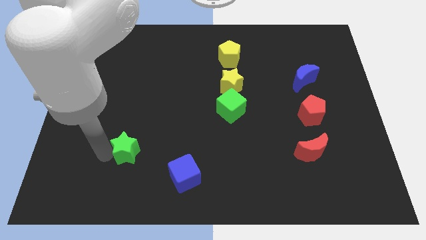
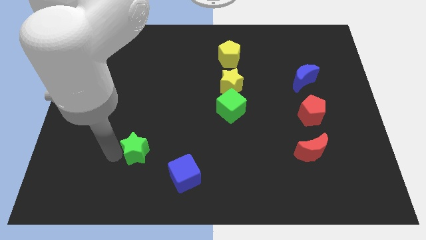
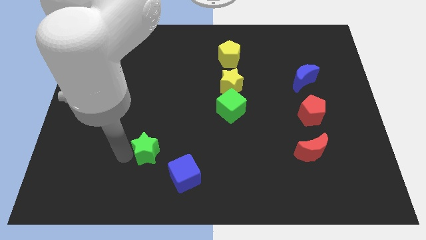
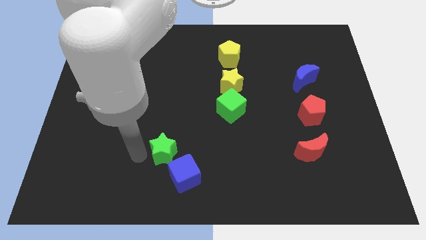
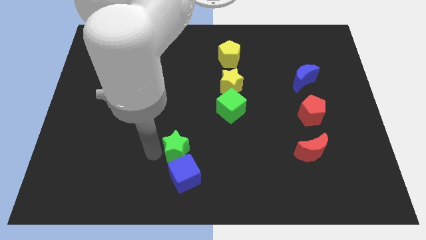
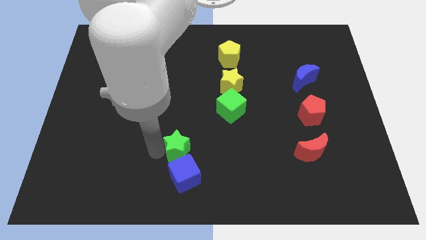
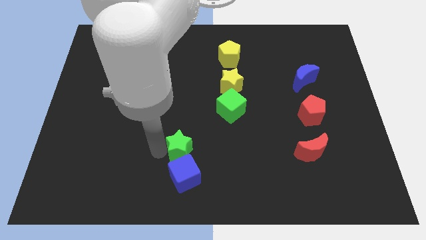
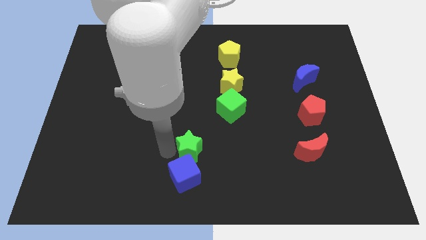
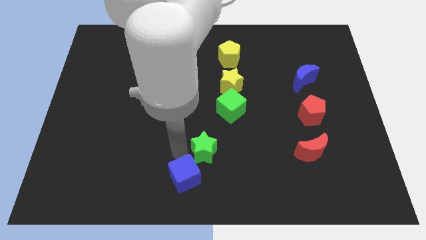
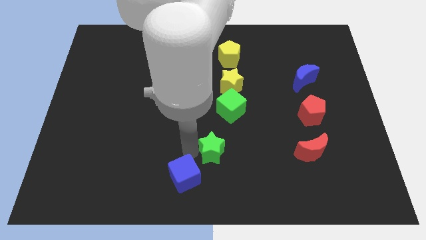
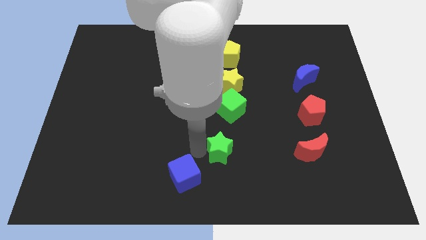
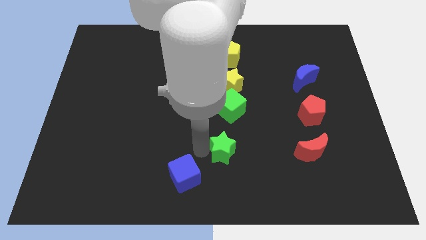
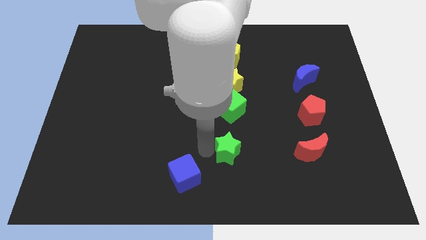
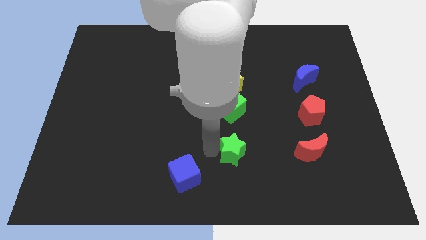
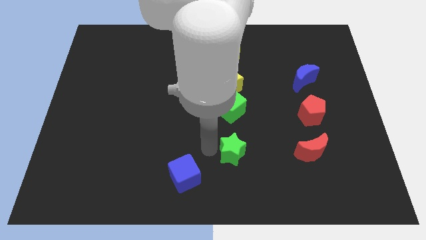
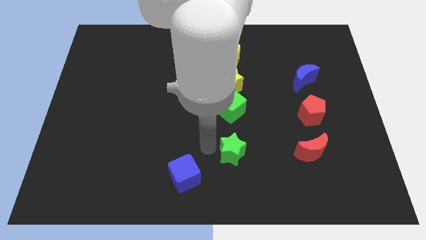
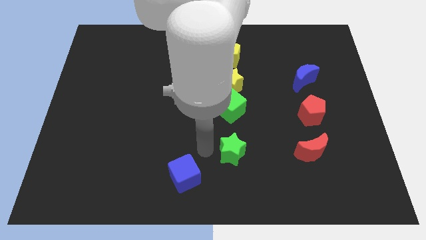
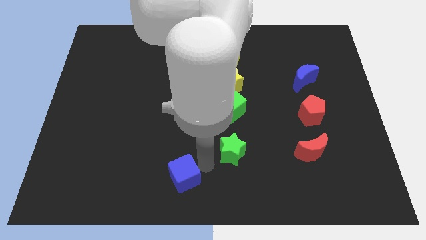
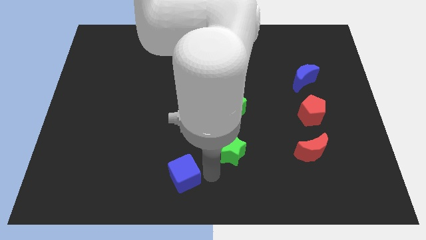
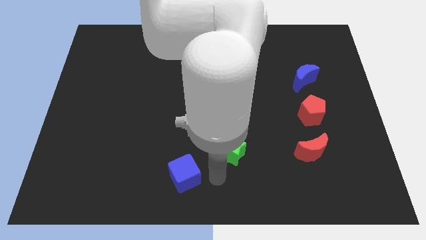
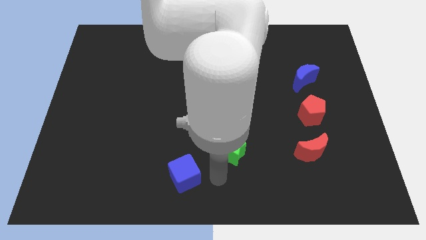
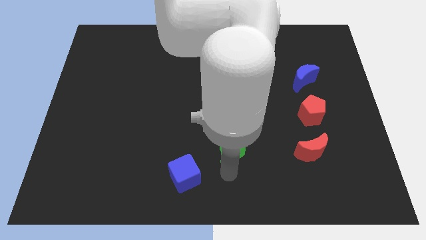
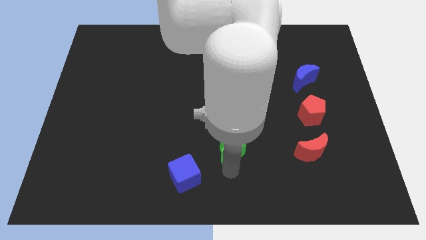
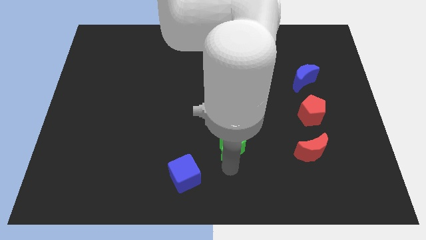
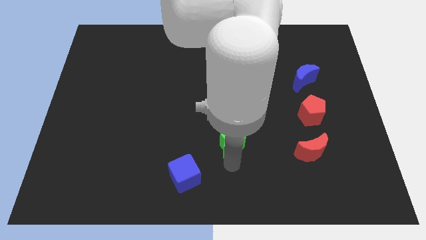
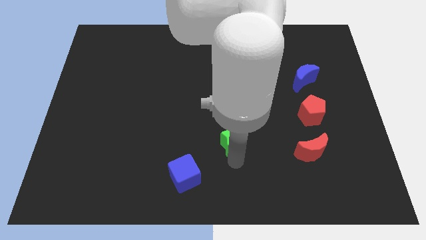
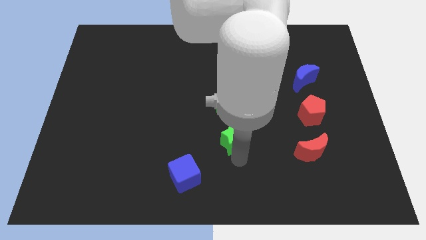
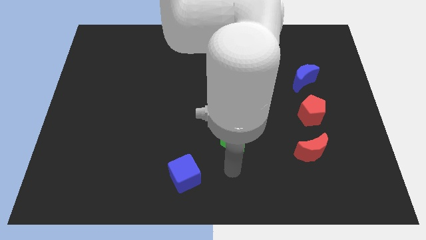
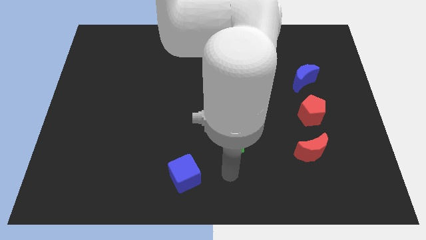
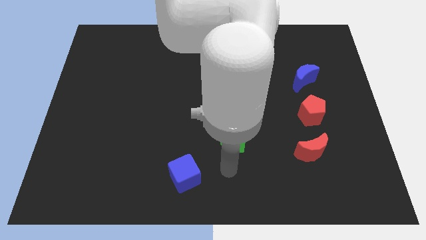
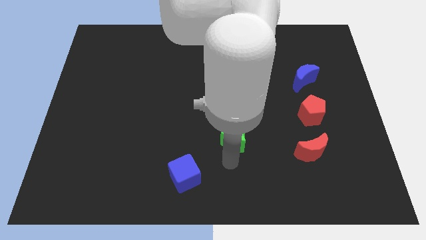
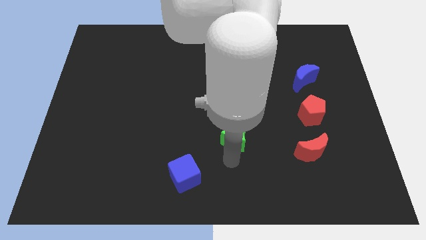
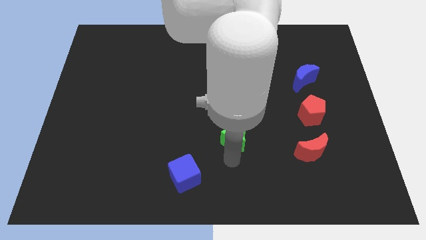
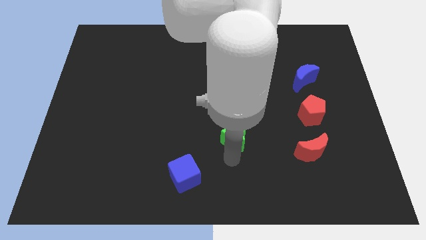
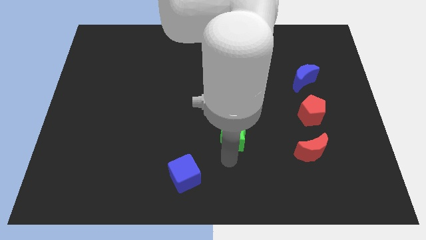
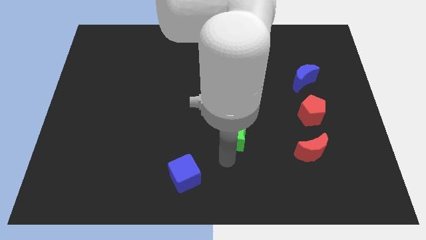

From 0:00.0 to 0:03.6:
push the green star to the bottom of the green cube

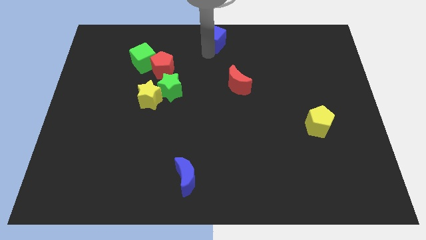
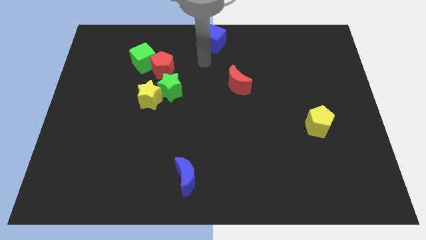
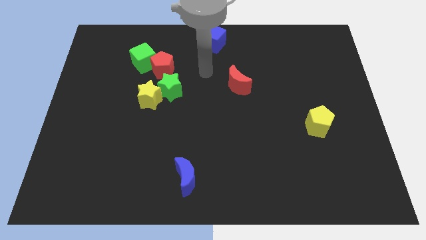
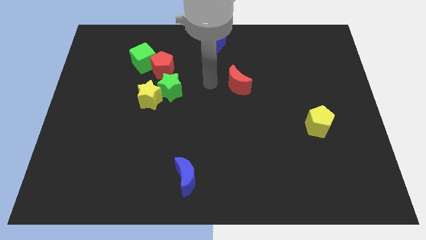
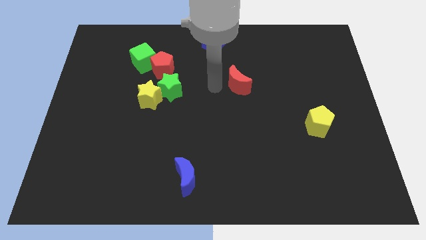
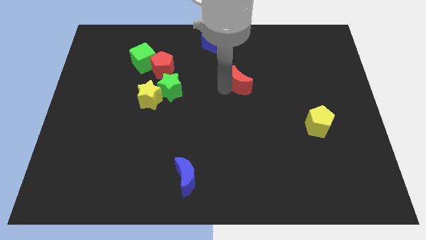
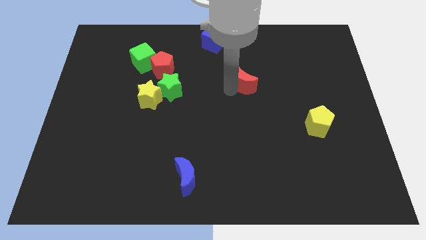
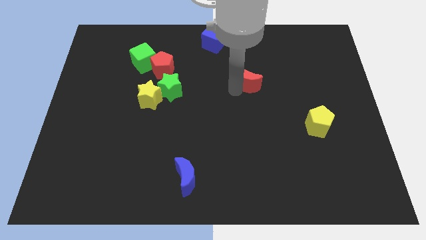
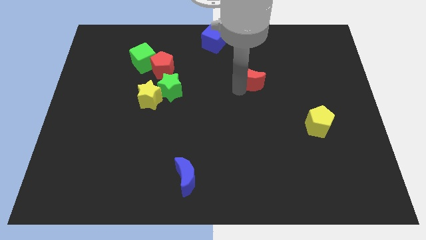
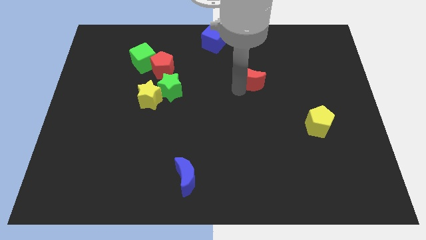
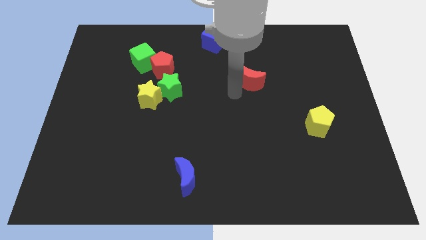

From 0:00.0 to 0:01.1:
push the red moon up slightly

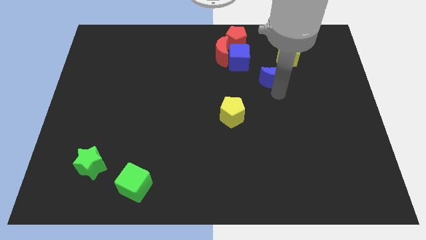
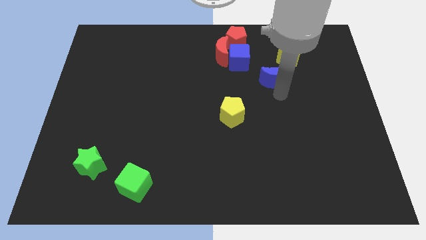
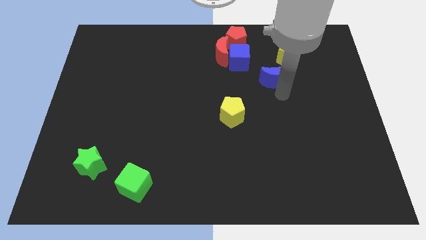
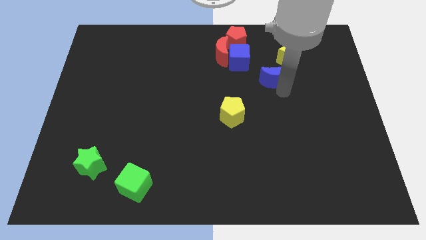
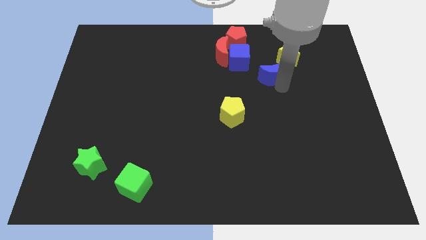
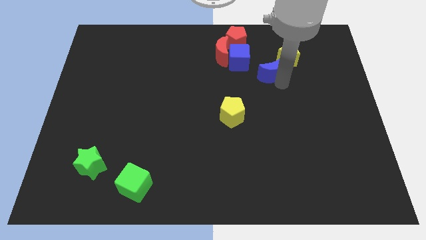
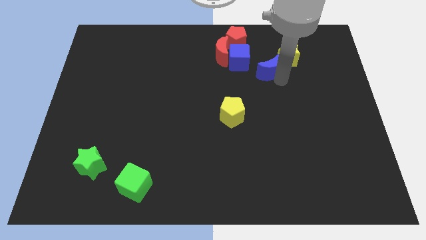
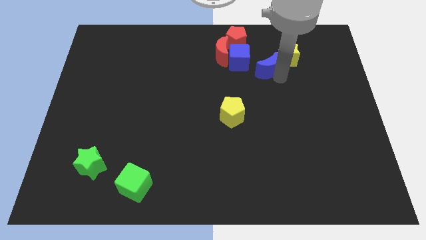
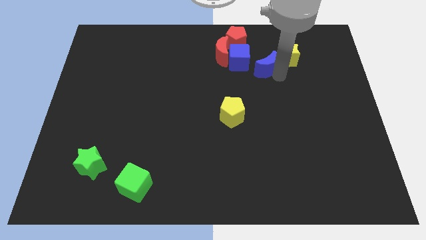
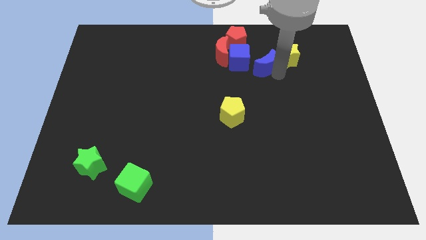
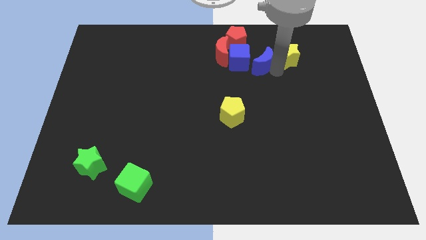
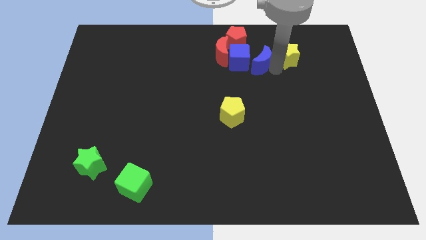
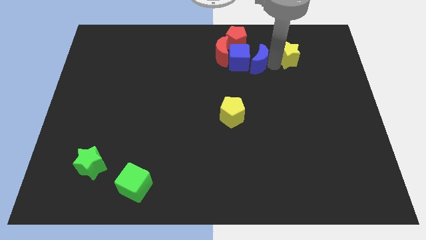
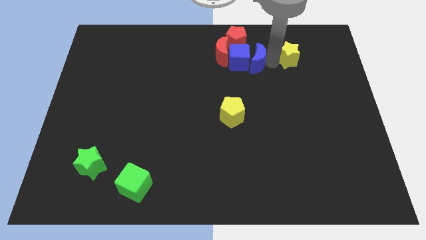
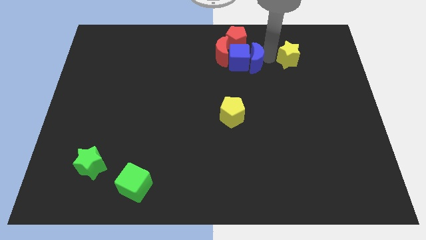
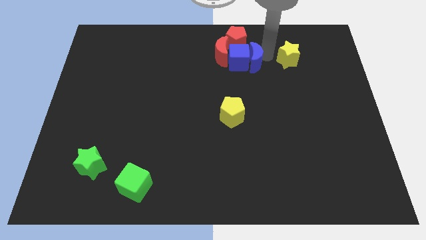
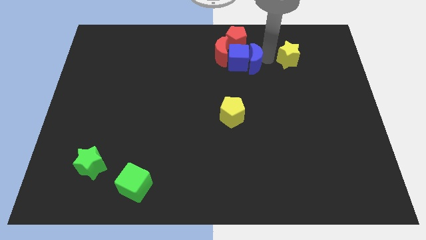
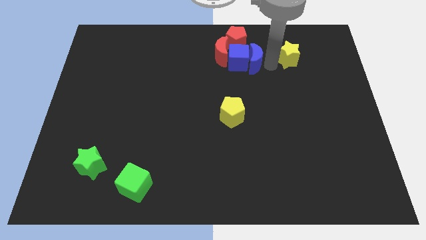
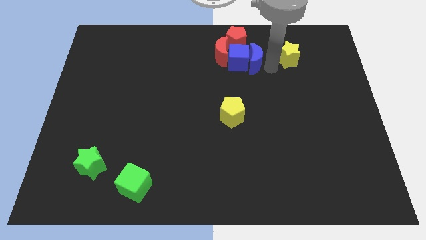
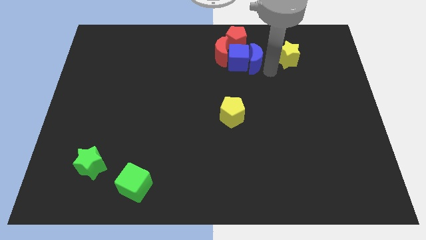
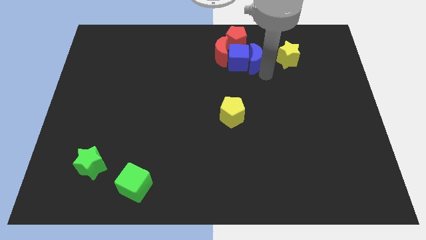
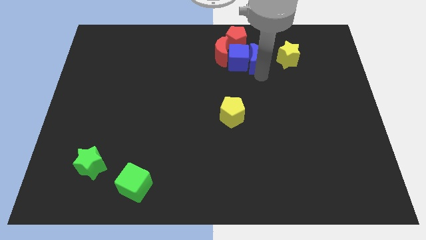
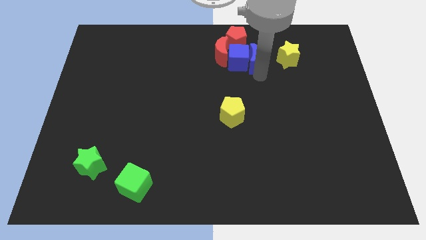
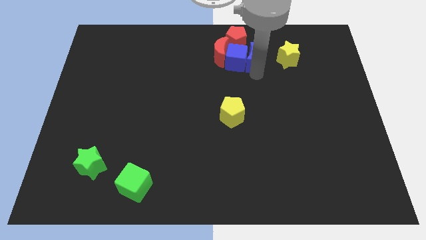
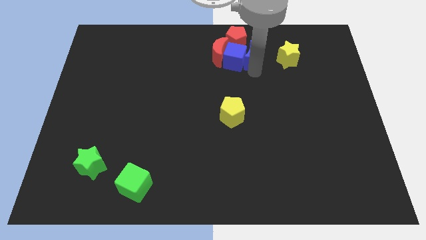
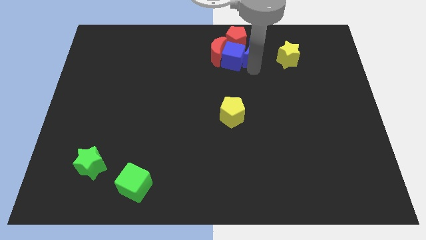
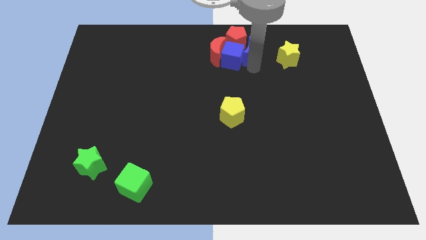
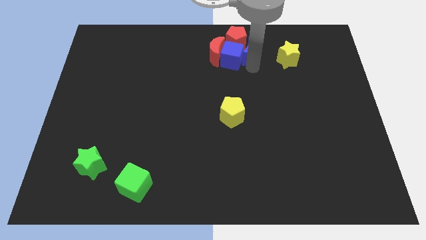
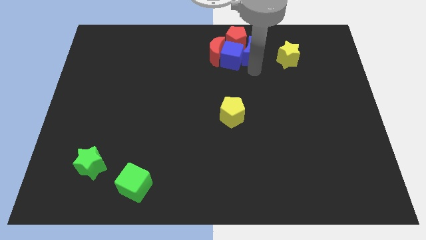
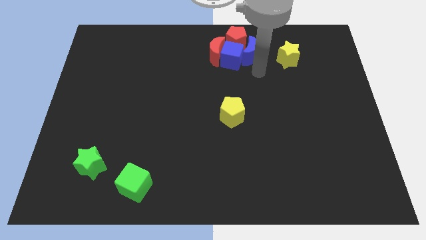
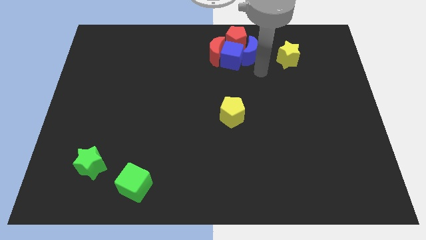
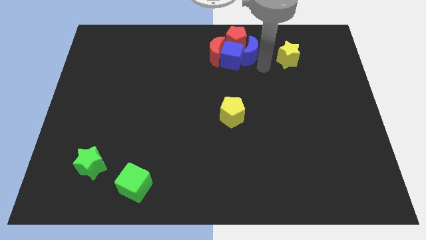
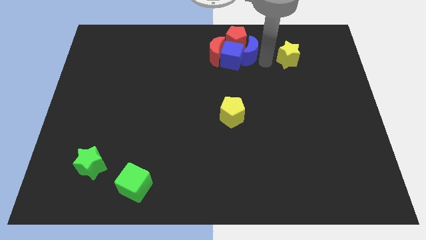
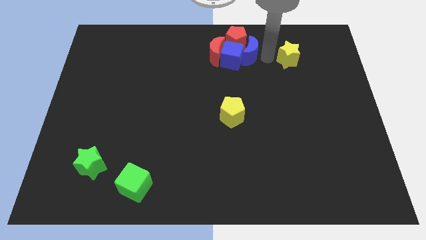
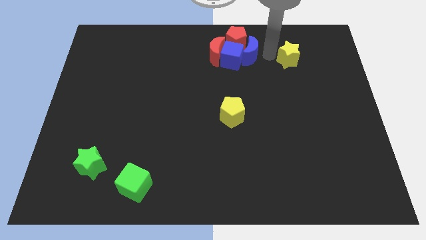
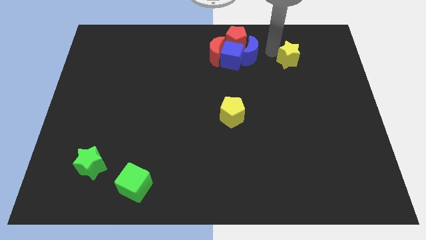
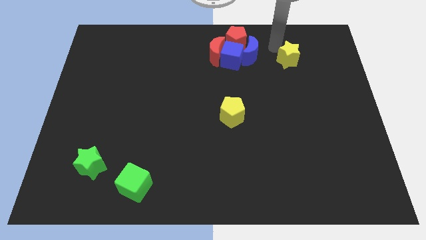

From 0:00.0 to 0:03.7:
place blue crescent on right side of blue cube

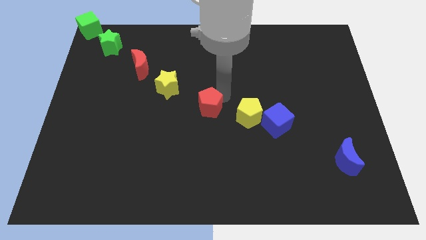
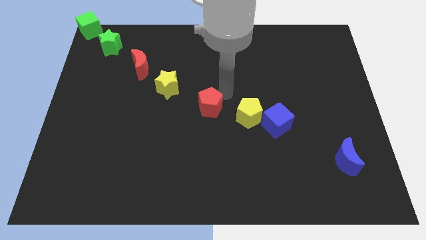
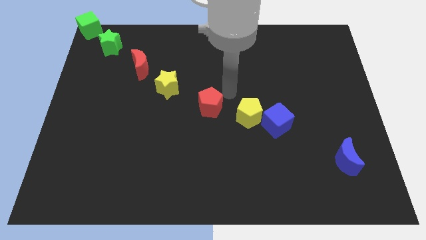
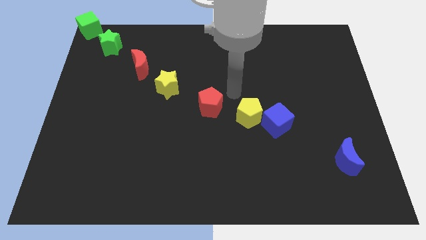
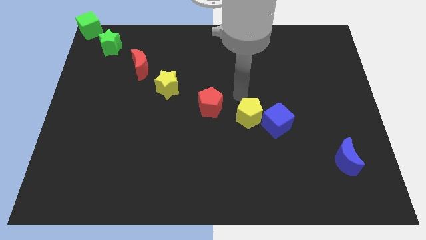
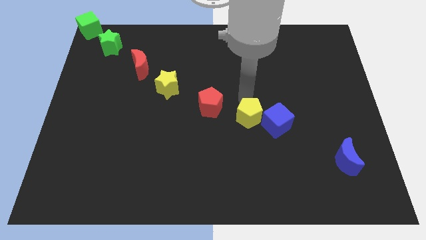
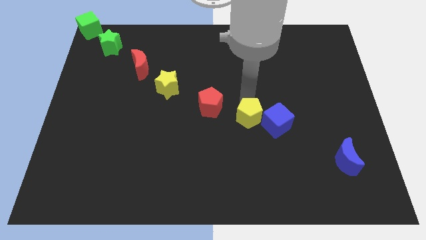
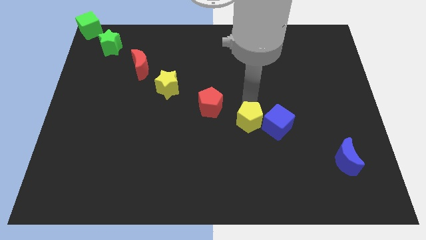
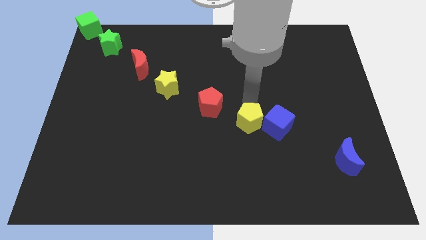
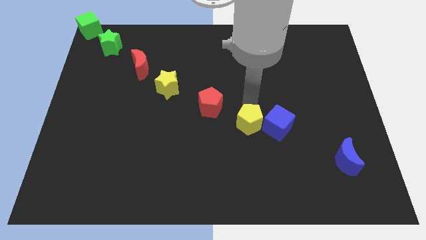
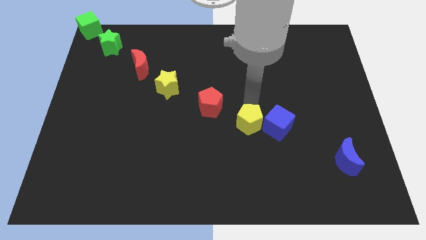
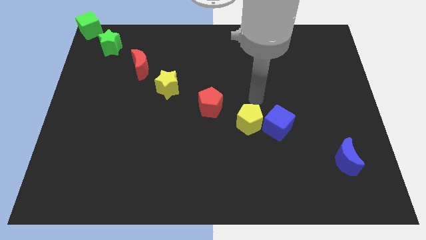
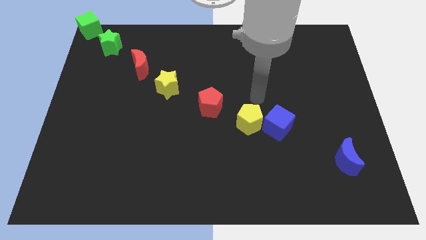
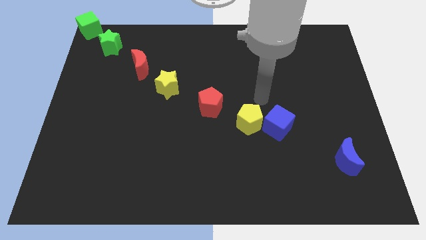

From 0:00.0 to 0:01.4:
push the yellow pentagon slightly down
